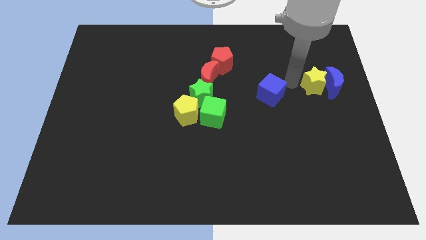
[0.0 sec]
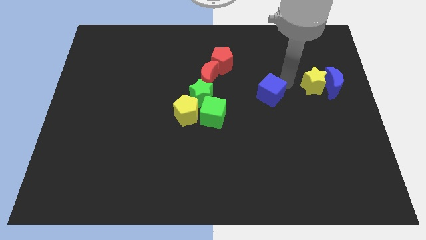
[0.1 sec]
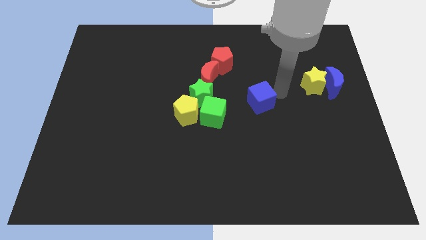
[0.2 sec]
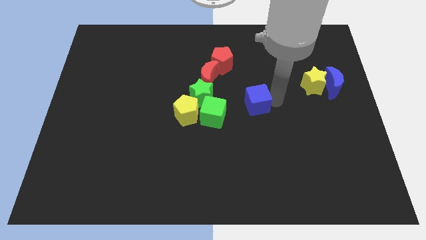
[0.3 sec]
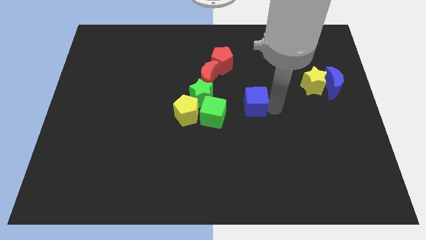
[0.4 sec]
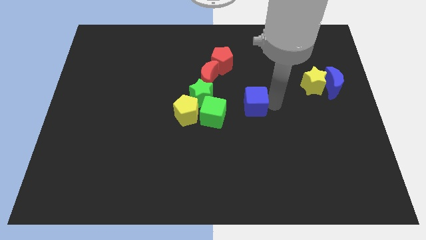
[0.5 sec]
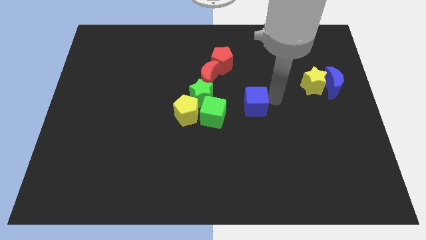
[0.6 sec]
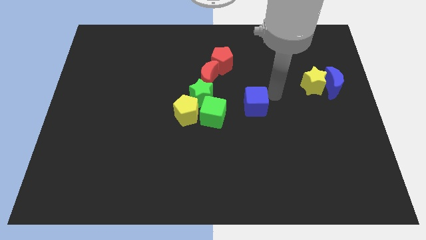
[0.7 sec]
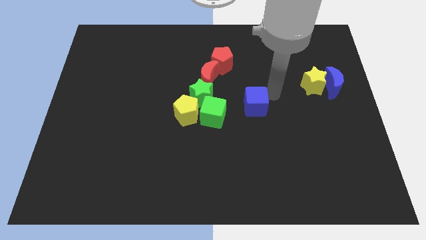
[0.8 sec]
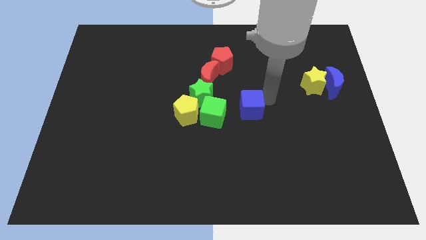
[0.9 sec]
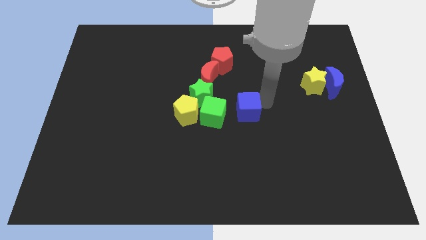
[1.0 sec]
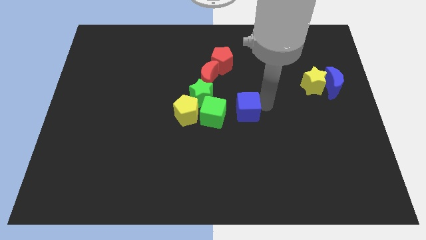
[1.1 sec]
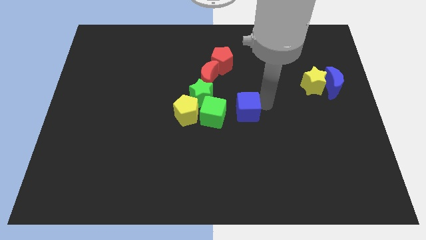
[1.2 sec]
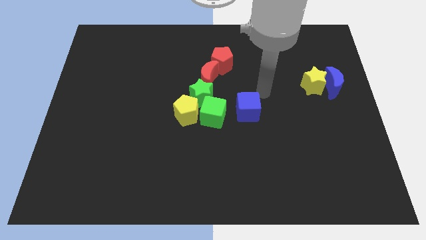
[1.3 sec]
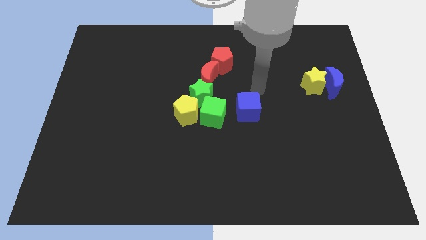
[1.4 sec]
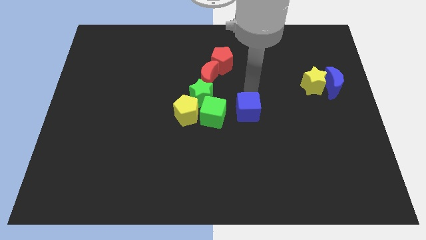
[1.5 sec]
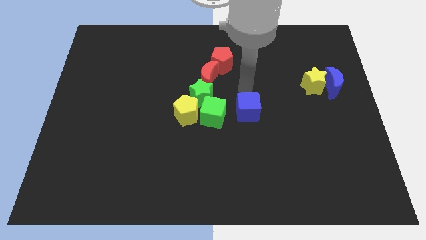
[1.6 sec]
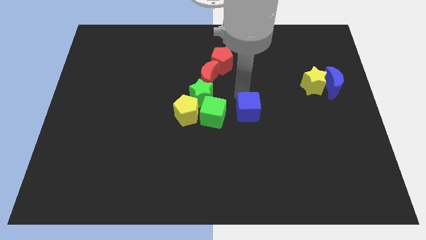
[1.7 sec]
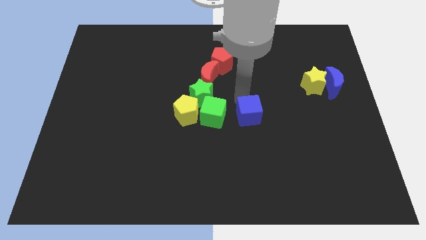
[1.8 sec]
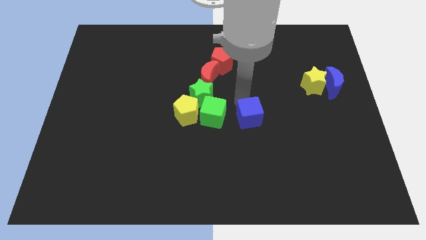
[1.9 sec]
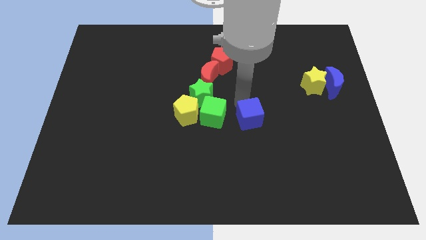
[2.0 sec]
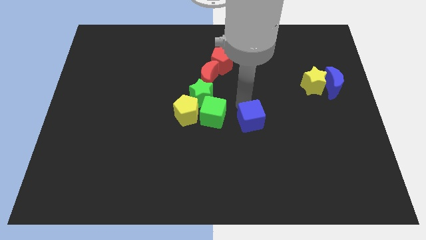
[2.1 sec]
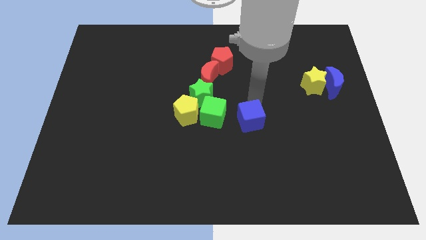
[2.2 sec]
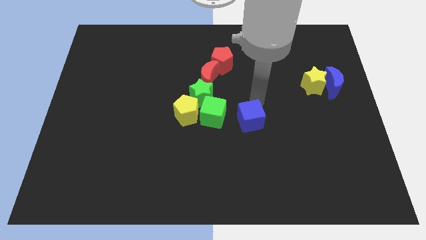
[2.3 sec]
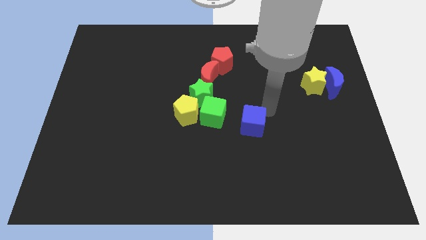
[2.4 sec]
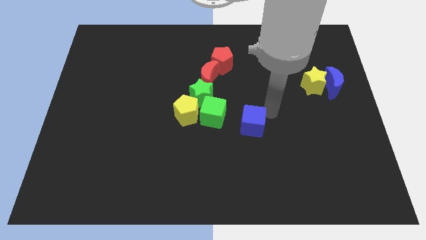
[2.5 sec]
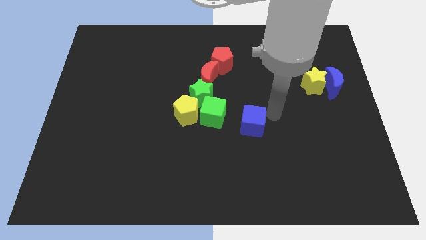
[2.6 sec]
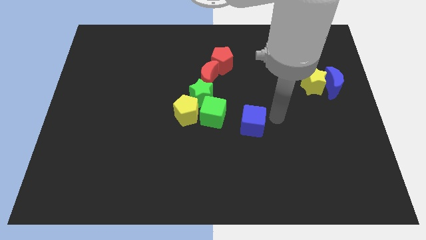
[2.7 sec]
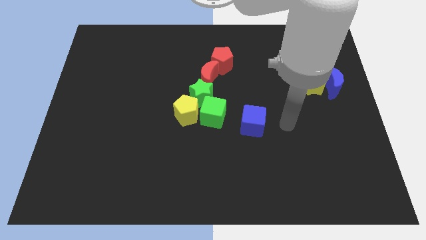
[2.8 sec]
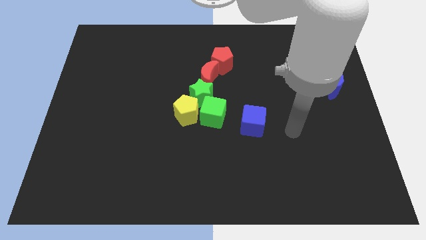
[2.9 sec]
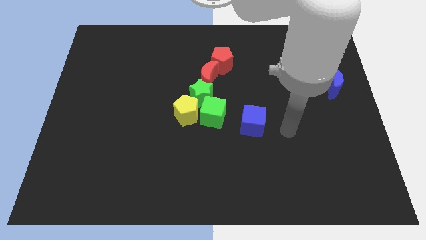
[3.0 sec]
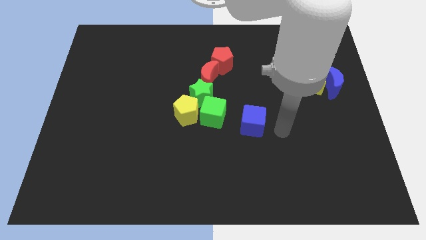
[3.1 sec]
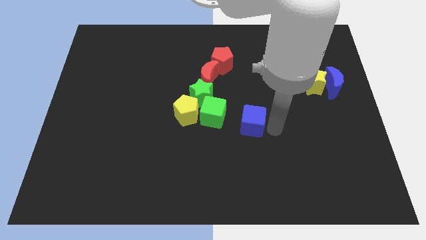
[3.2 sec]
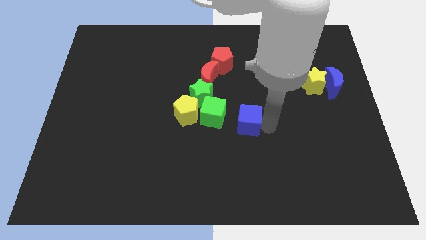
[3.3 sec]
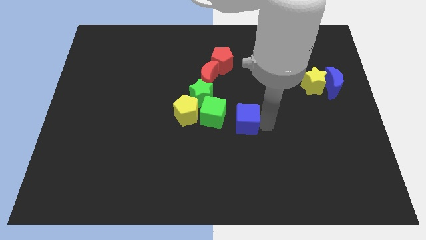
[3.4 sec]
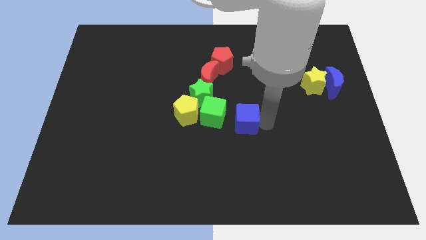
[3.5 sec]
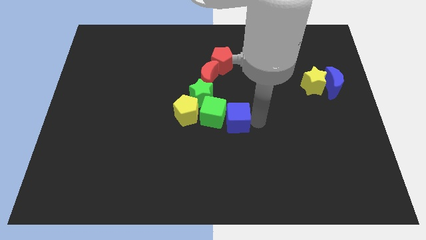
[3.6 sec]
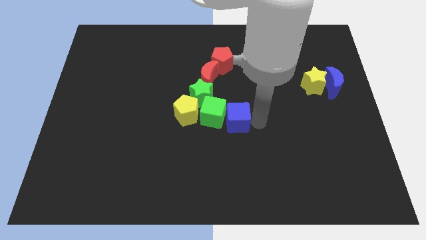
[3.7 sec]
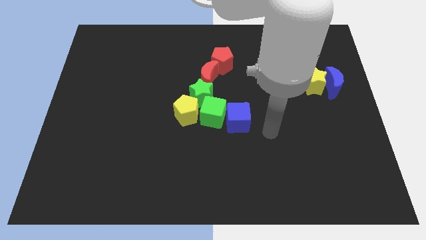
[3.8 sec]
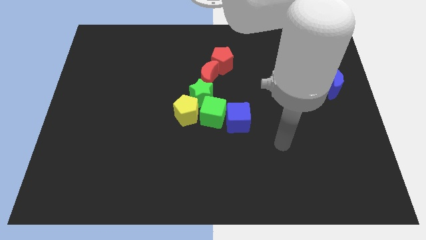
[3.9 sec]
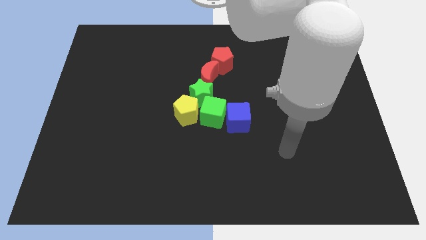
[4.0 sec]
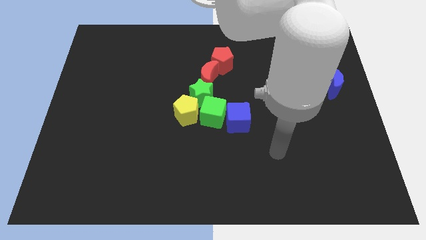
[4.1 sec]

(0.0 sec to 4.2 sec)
place the blue cube towards the right side of the green cube

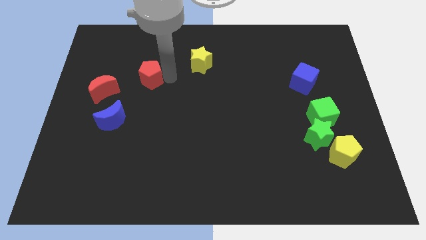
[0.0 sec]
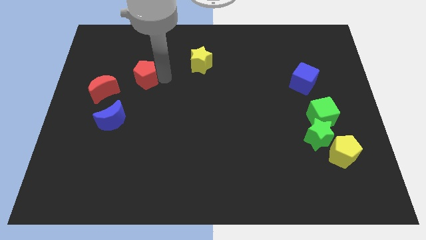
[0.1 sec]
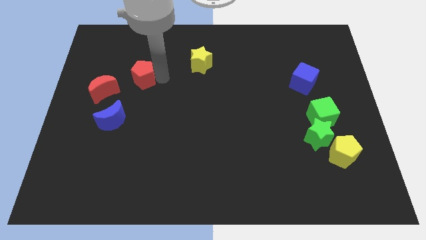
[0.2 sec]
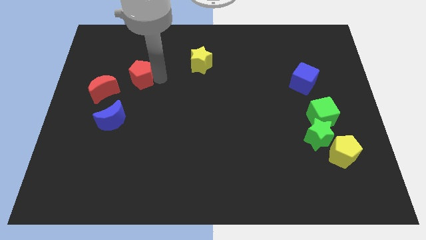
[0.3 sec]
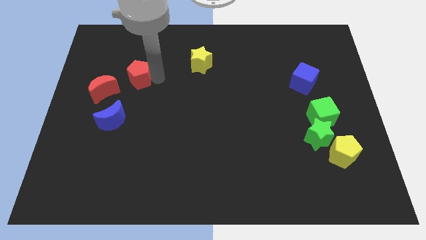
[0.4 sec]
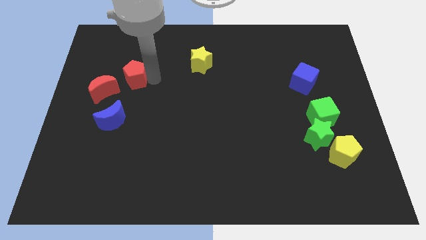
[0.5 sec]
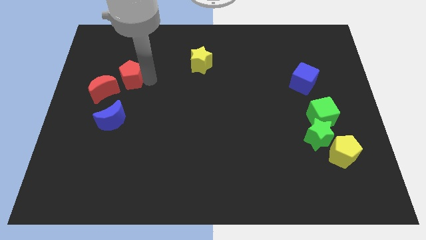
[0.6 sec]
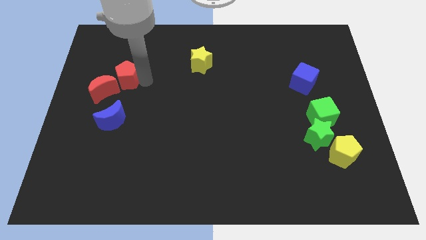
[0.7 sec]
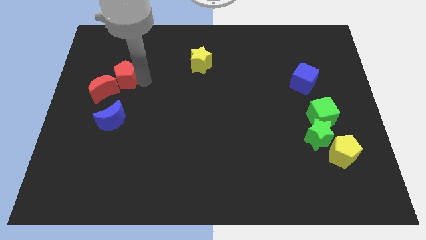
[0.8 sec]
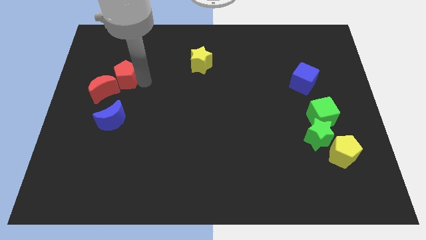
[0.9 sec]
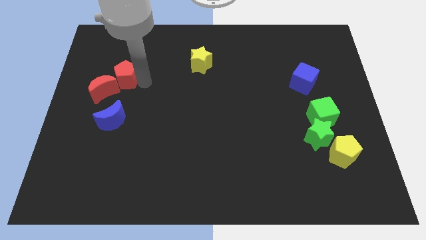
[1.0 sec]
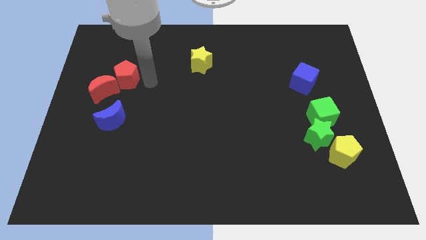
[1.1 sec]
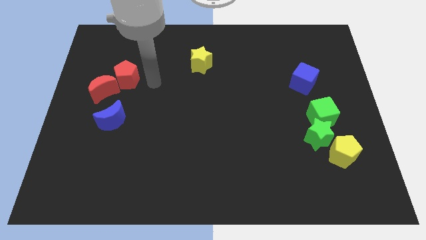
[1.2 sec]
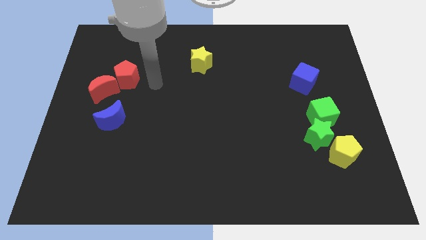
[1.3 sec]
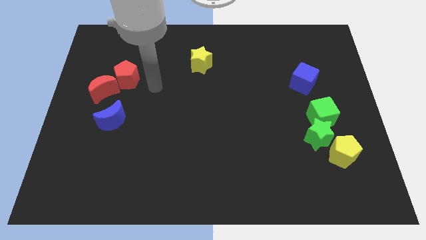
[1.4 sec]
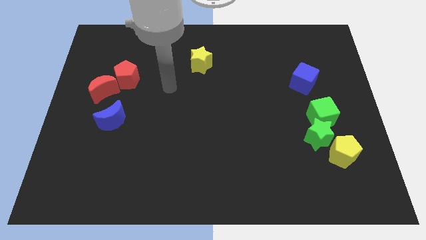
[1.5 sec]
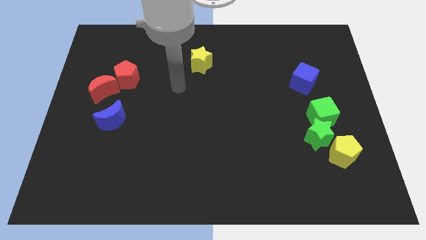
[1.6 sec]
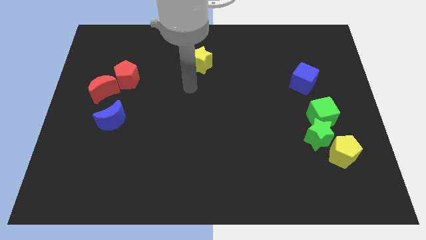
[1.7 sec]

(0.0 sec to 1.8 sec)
move the red pentagon close to the red moon

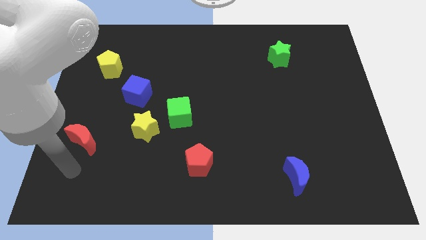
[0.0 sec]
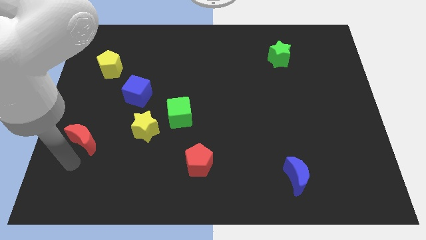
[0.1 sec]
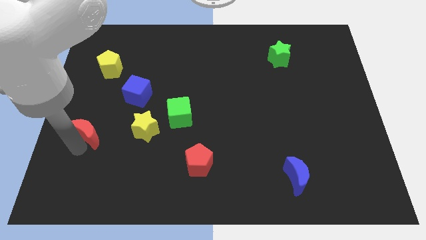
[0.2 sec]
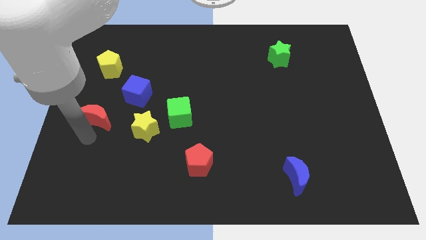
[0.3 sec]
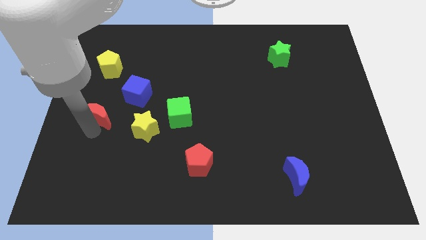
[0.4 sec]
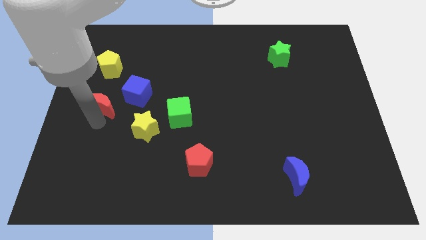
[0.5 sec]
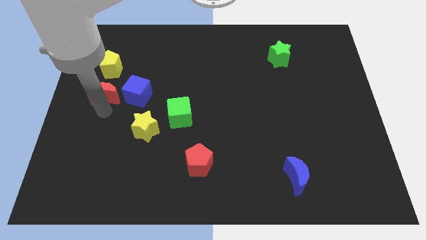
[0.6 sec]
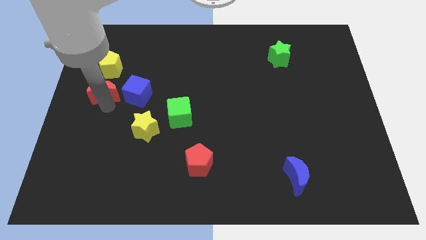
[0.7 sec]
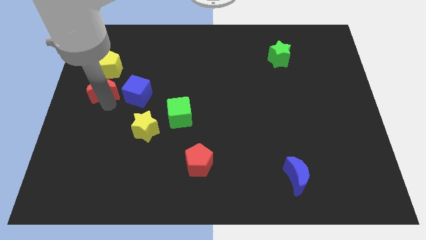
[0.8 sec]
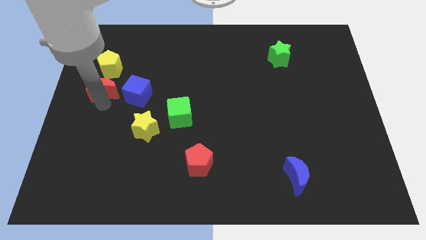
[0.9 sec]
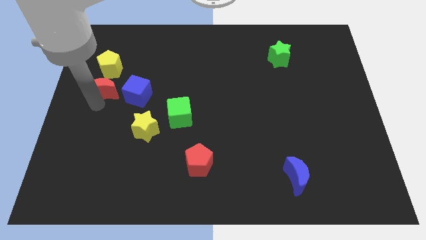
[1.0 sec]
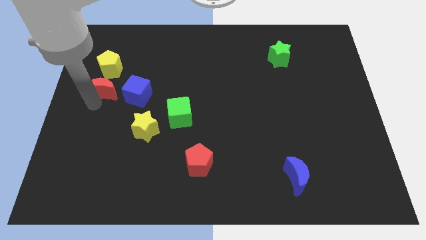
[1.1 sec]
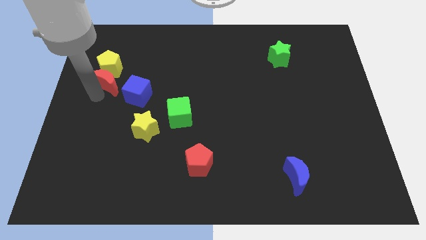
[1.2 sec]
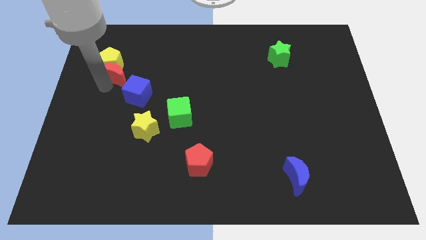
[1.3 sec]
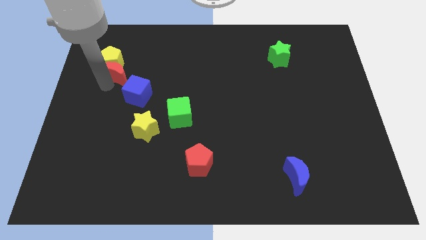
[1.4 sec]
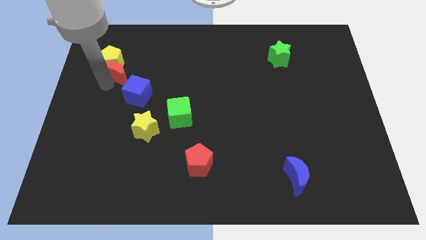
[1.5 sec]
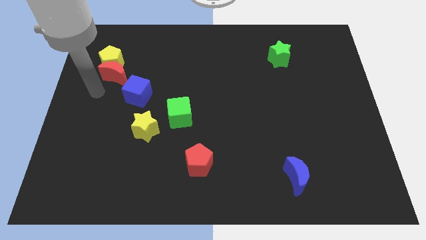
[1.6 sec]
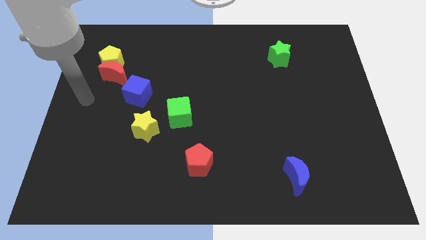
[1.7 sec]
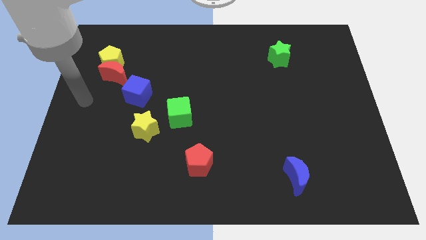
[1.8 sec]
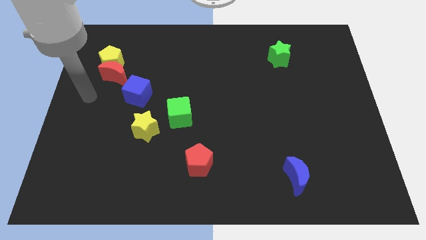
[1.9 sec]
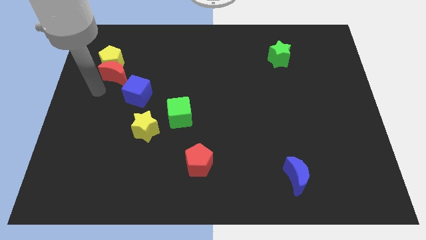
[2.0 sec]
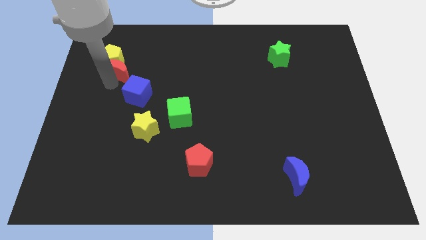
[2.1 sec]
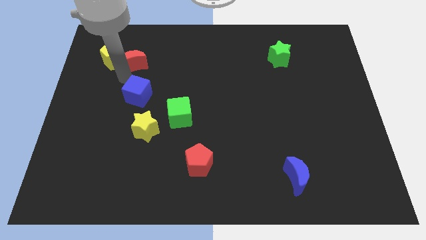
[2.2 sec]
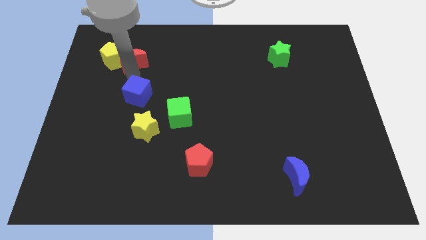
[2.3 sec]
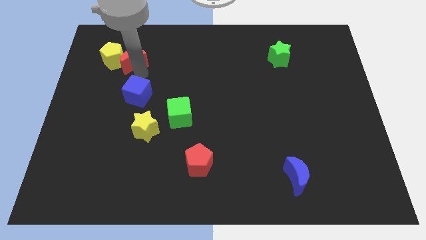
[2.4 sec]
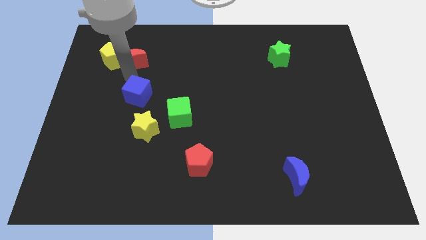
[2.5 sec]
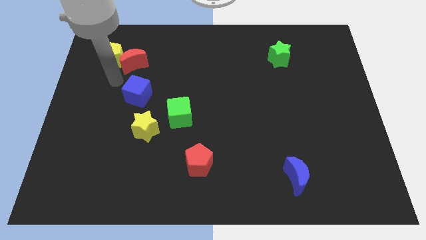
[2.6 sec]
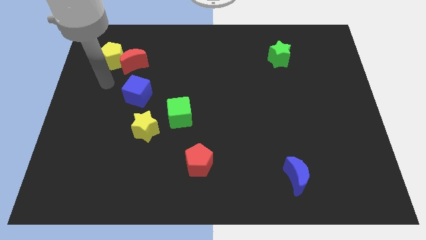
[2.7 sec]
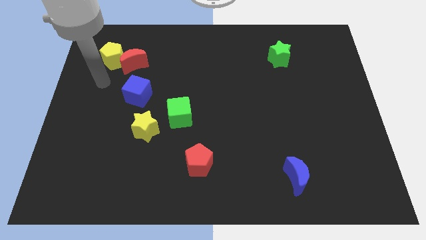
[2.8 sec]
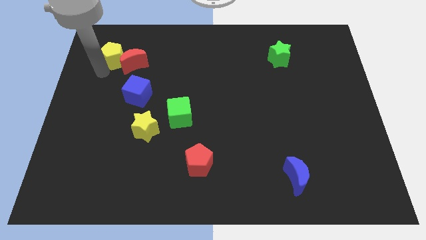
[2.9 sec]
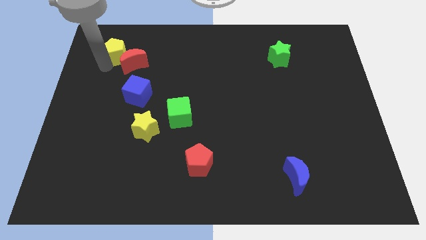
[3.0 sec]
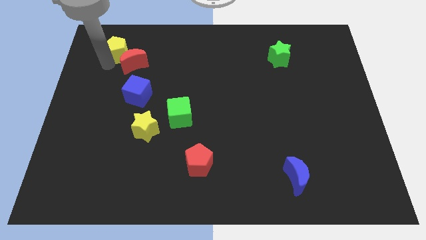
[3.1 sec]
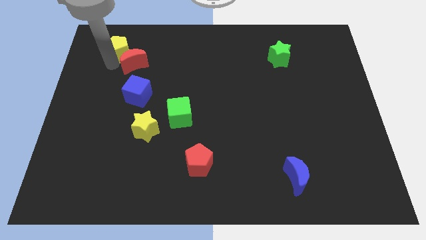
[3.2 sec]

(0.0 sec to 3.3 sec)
place the red crescent in between the yellow pentagon and blue cube
